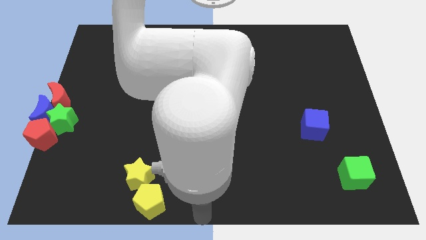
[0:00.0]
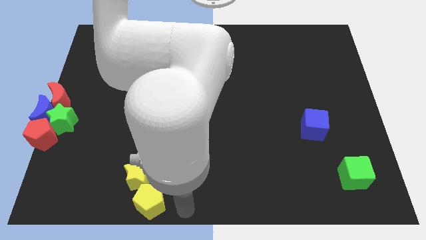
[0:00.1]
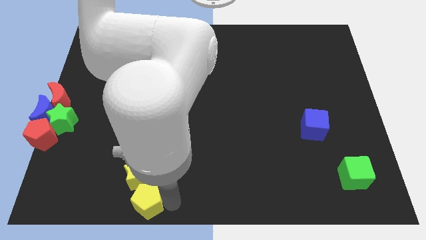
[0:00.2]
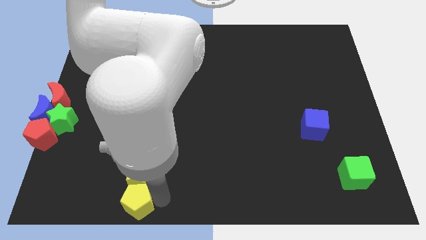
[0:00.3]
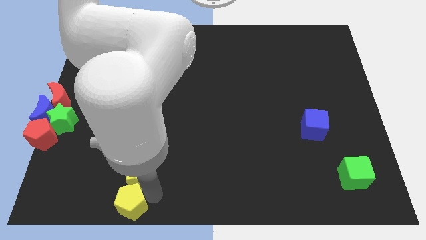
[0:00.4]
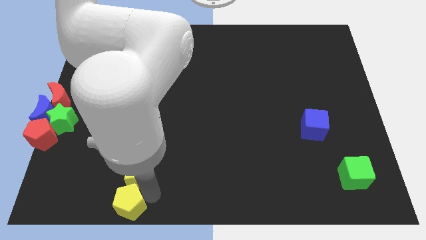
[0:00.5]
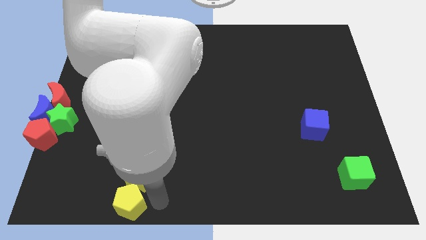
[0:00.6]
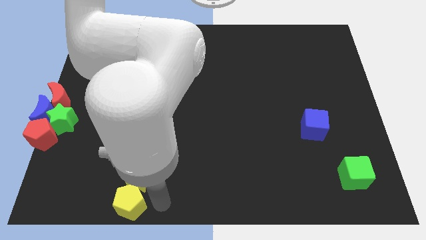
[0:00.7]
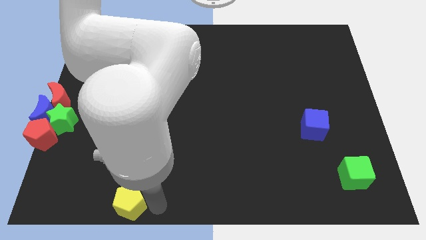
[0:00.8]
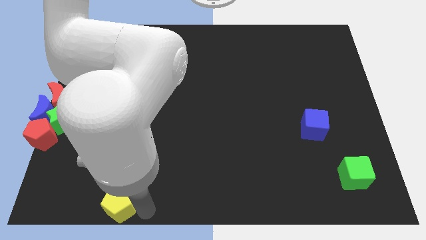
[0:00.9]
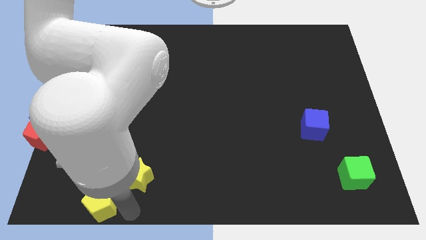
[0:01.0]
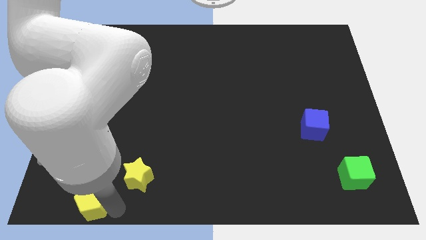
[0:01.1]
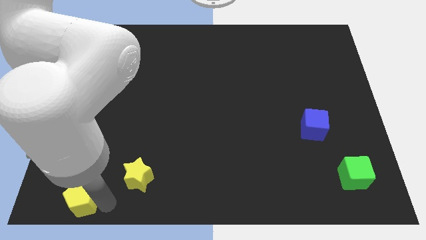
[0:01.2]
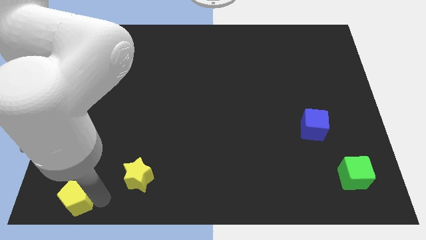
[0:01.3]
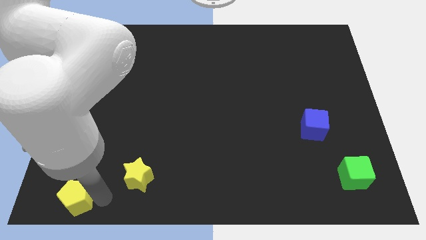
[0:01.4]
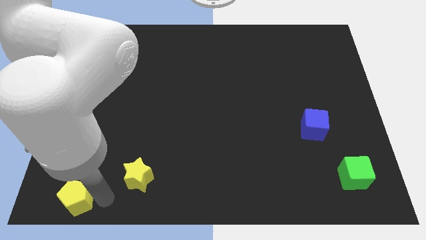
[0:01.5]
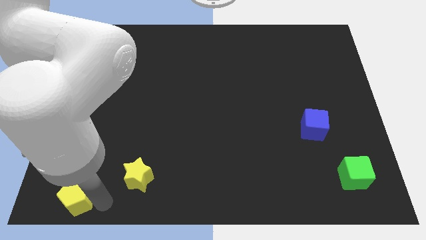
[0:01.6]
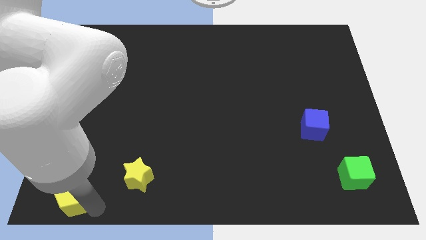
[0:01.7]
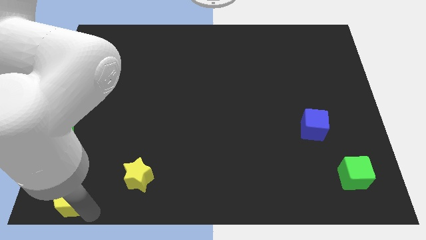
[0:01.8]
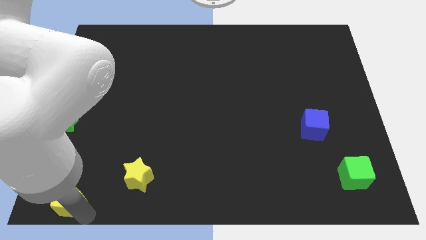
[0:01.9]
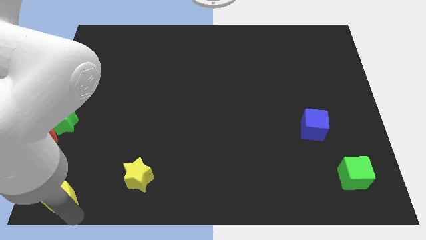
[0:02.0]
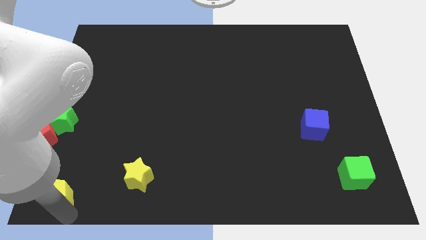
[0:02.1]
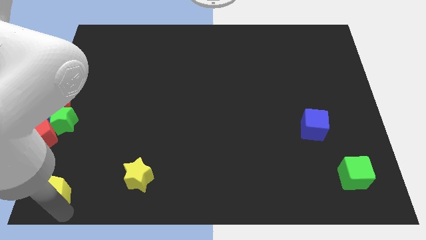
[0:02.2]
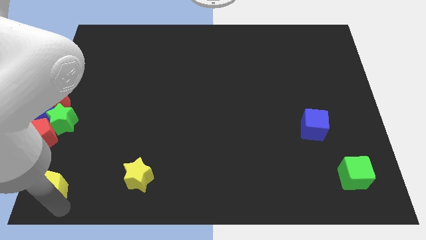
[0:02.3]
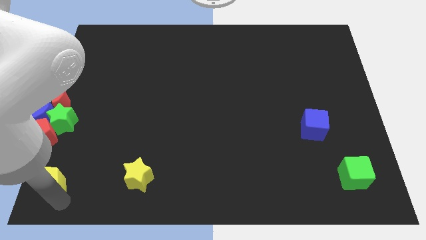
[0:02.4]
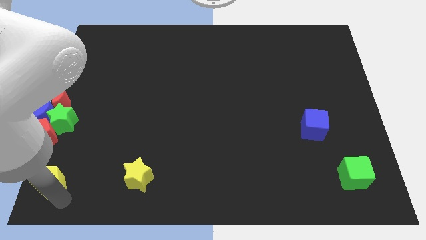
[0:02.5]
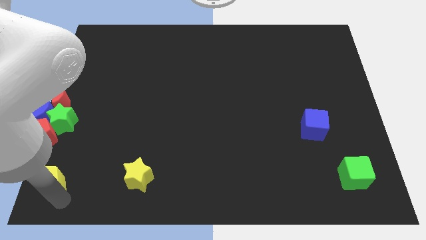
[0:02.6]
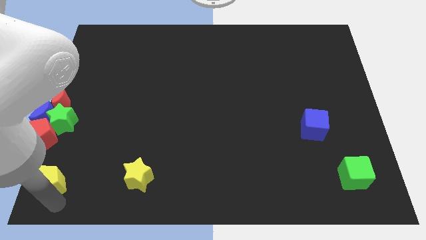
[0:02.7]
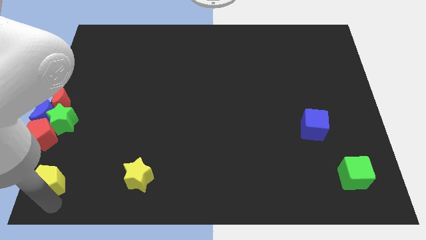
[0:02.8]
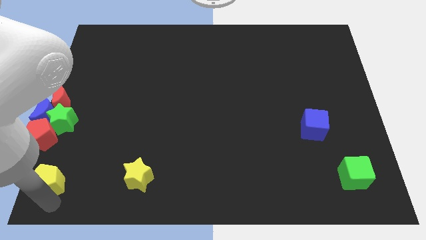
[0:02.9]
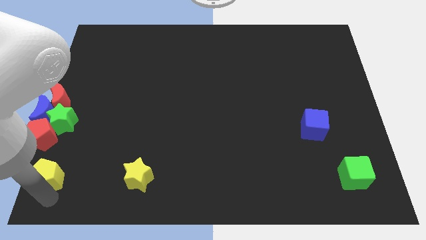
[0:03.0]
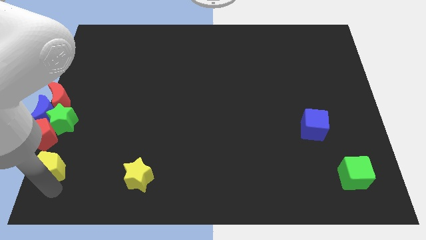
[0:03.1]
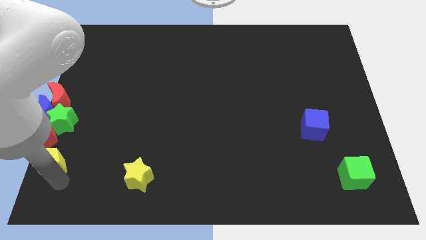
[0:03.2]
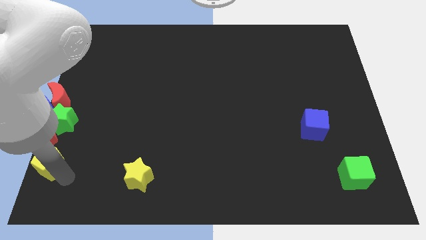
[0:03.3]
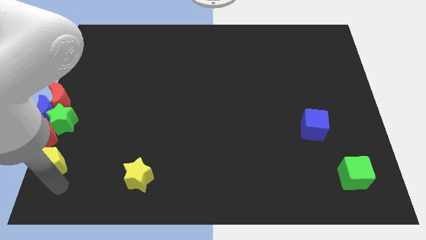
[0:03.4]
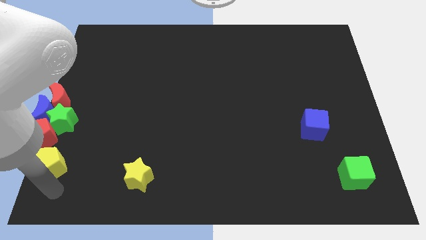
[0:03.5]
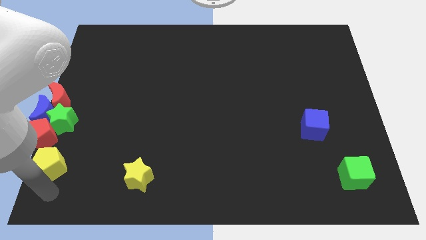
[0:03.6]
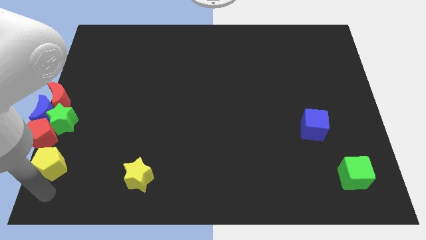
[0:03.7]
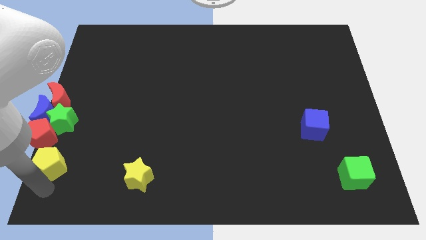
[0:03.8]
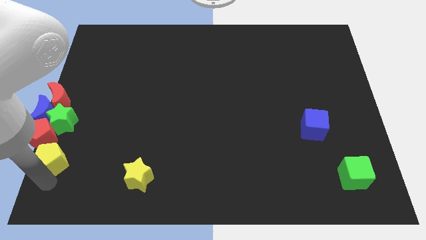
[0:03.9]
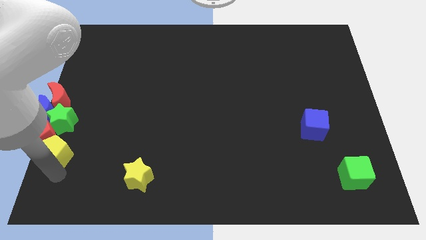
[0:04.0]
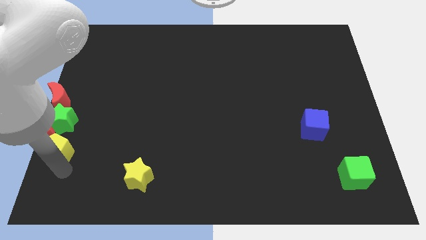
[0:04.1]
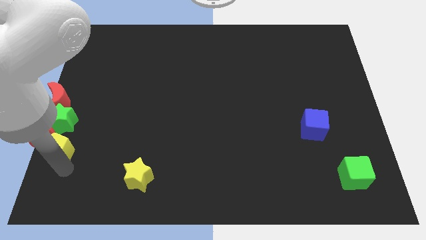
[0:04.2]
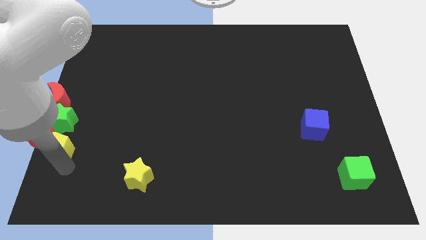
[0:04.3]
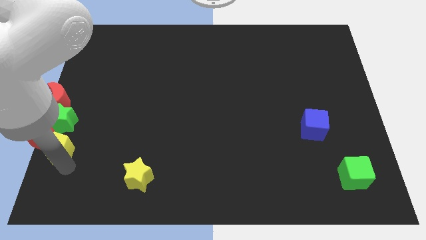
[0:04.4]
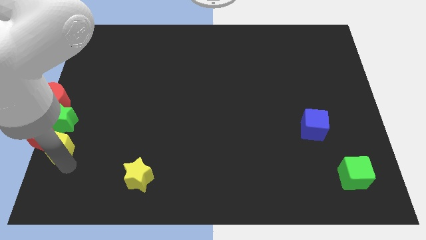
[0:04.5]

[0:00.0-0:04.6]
place yellow pentagon to the bottom of green star

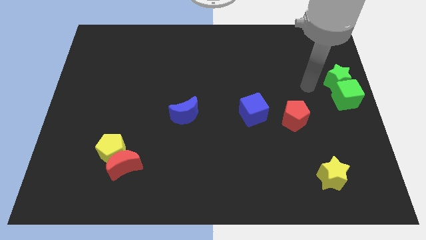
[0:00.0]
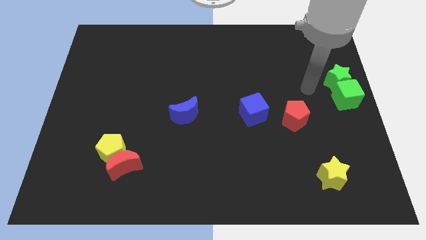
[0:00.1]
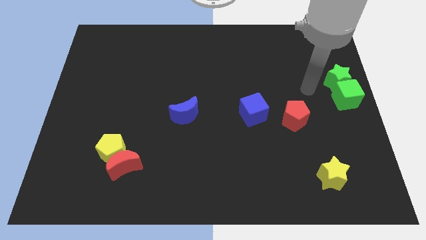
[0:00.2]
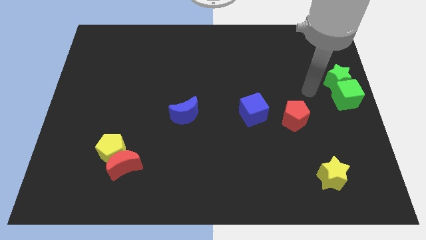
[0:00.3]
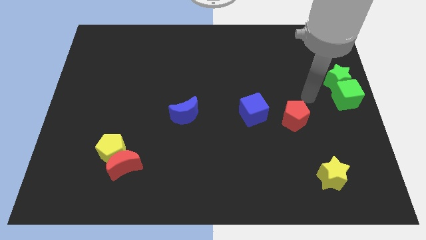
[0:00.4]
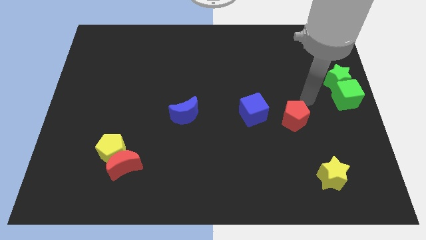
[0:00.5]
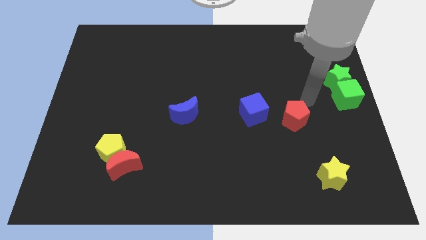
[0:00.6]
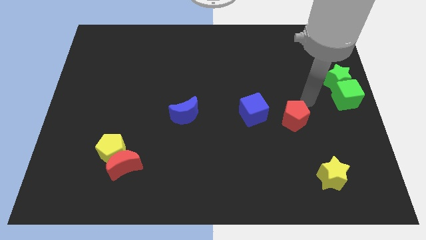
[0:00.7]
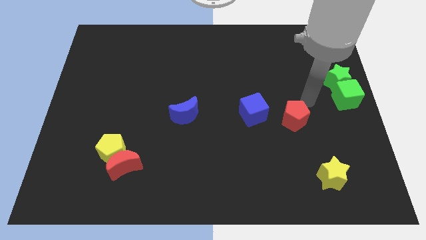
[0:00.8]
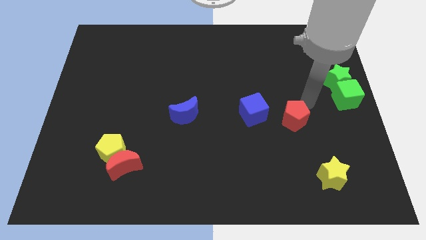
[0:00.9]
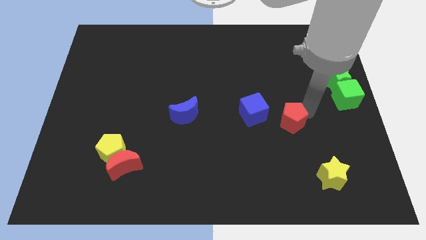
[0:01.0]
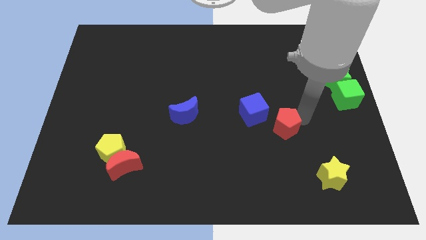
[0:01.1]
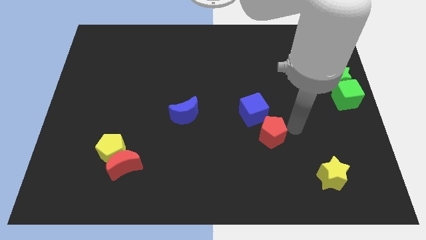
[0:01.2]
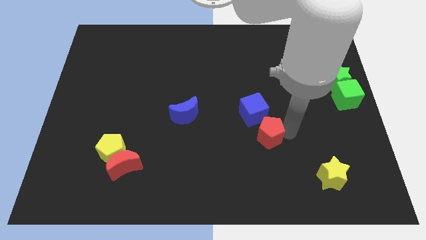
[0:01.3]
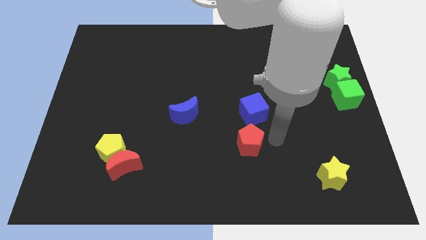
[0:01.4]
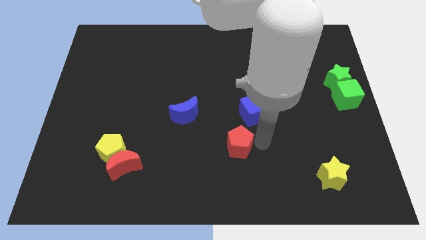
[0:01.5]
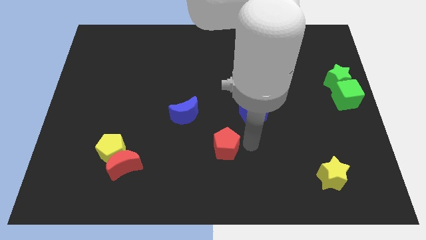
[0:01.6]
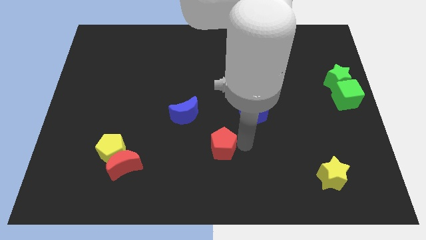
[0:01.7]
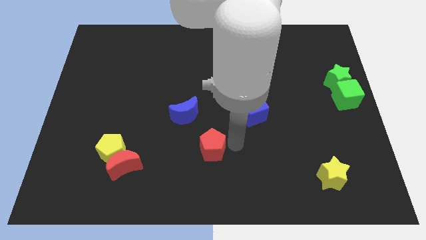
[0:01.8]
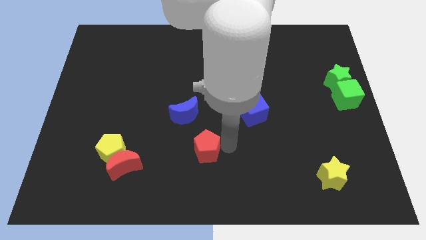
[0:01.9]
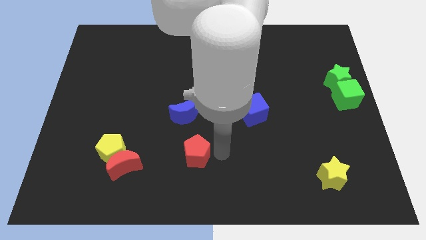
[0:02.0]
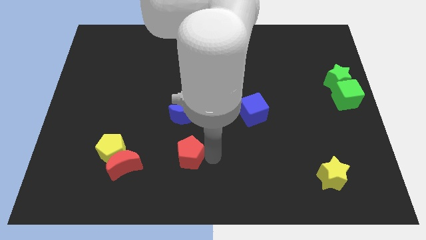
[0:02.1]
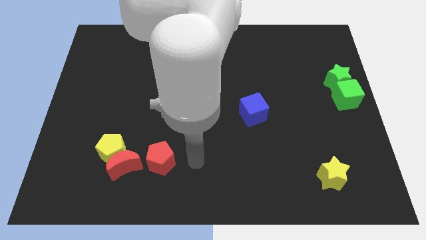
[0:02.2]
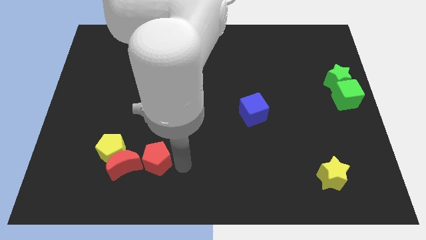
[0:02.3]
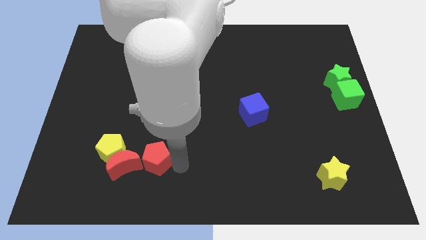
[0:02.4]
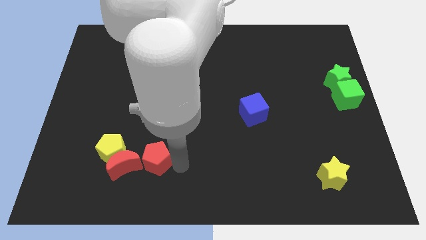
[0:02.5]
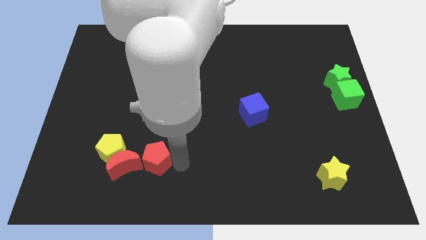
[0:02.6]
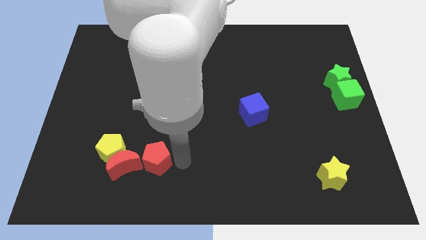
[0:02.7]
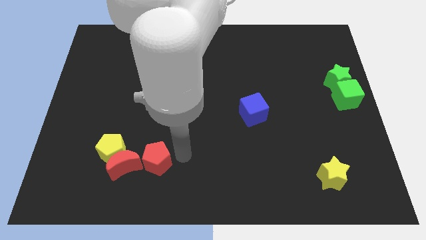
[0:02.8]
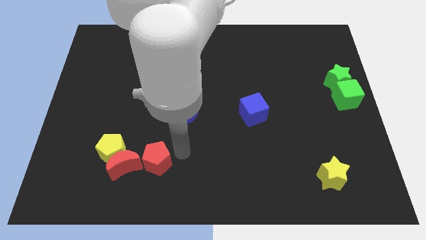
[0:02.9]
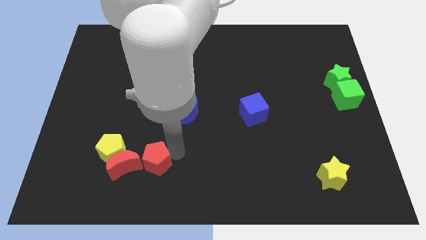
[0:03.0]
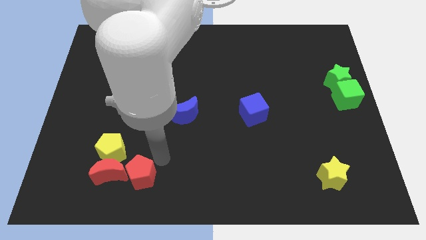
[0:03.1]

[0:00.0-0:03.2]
move the red pentagon right to the red crescent

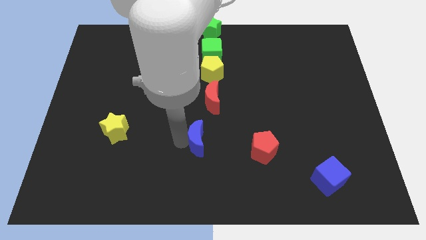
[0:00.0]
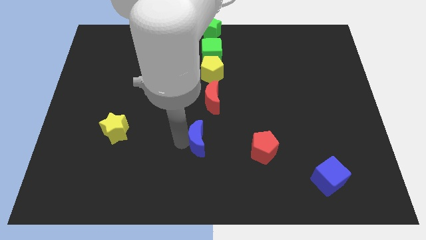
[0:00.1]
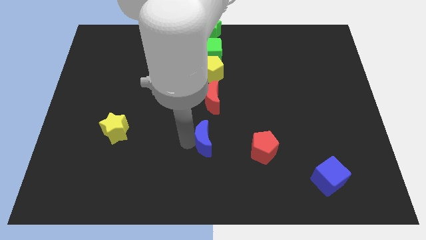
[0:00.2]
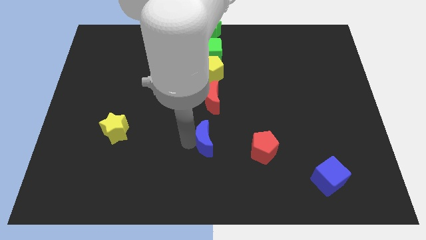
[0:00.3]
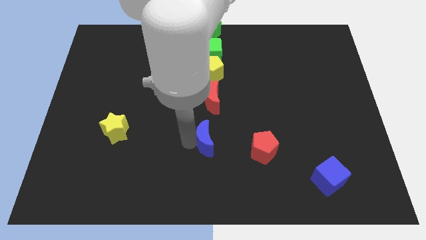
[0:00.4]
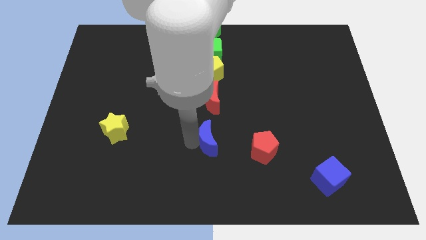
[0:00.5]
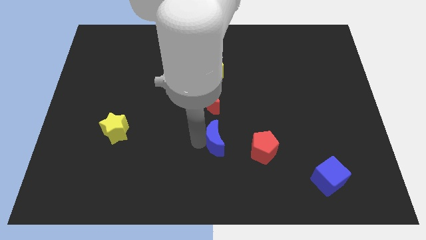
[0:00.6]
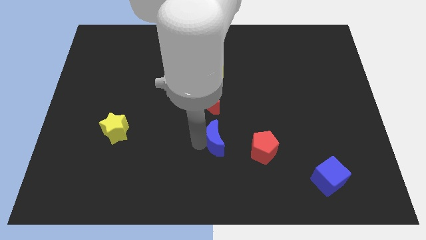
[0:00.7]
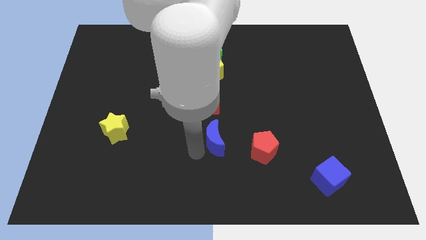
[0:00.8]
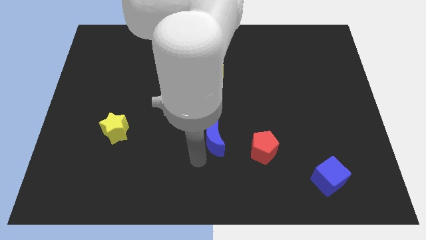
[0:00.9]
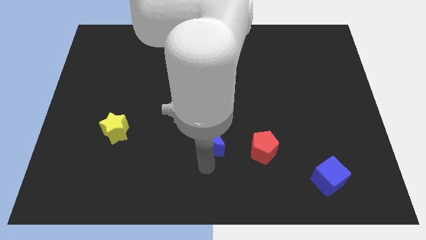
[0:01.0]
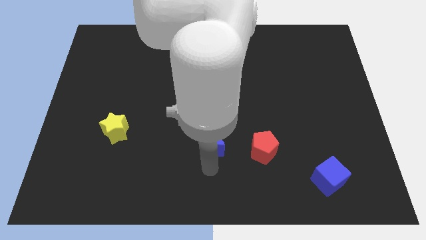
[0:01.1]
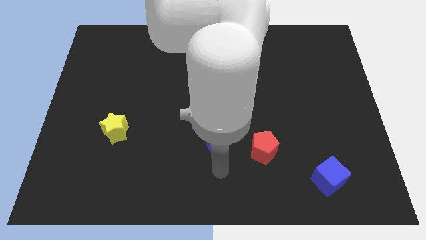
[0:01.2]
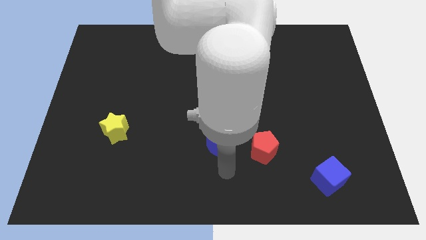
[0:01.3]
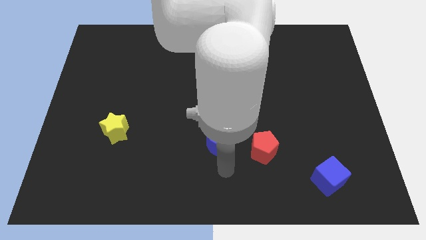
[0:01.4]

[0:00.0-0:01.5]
place the blue moon below the red moon
